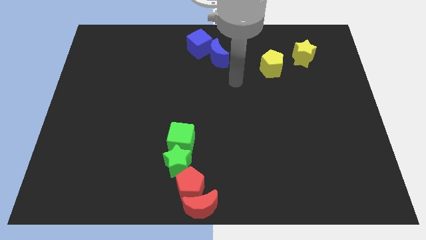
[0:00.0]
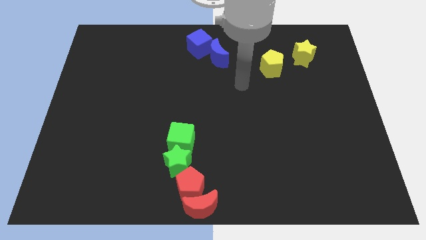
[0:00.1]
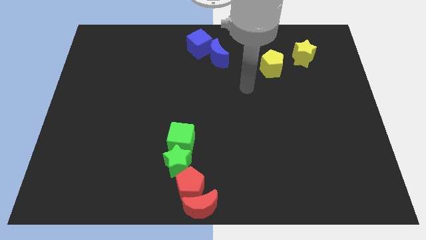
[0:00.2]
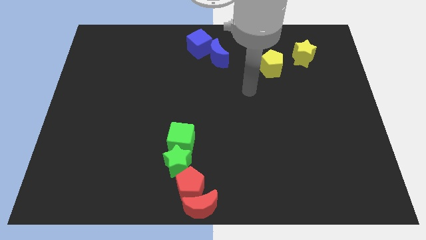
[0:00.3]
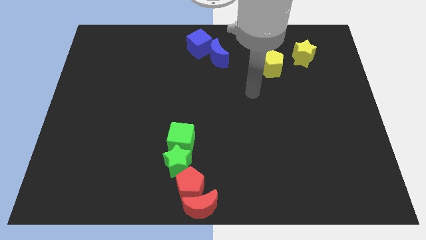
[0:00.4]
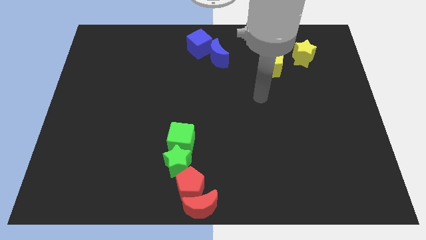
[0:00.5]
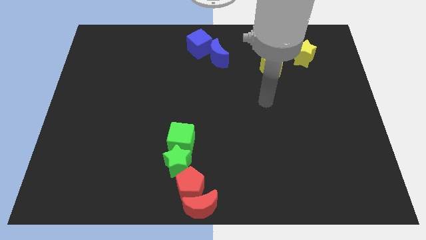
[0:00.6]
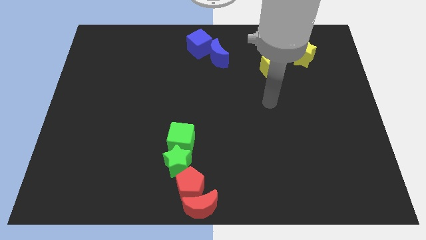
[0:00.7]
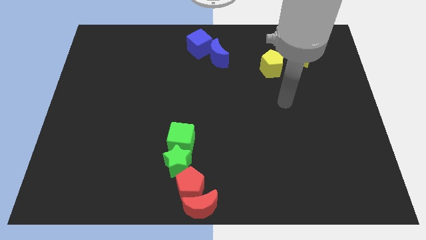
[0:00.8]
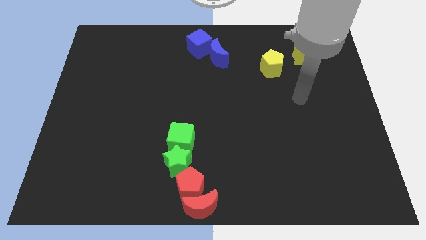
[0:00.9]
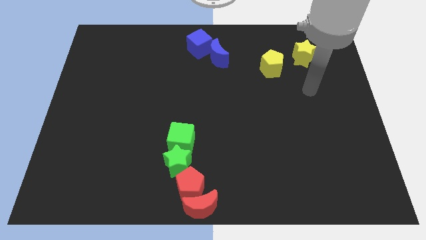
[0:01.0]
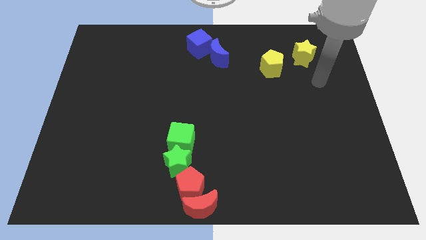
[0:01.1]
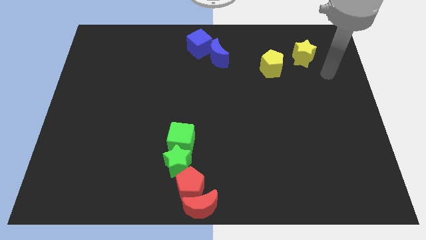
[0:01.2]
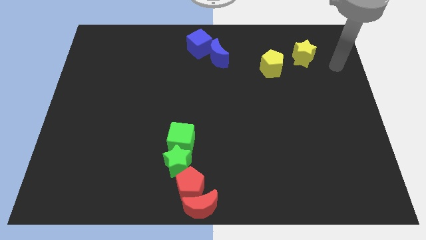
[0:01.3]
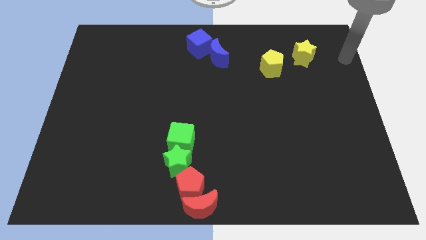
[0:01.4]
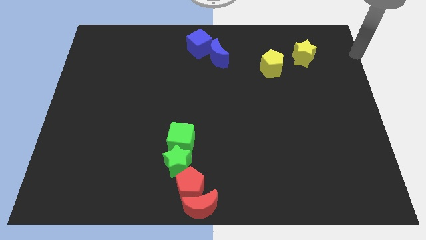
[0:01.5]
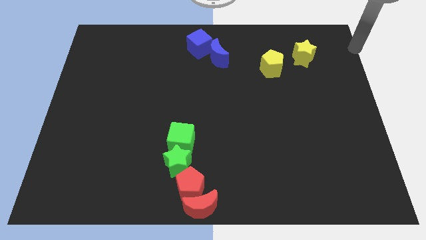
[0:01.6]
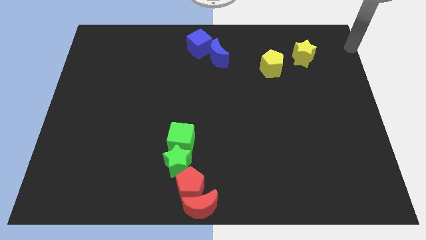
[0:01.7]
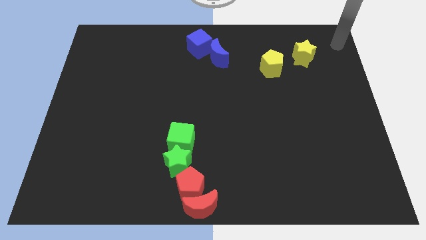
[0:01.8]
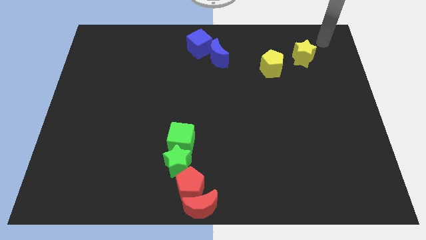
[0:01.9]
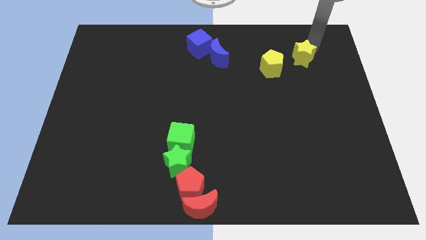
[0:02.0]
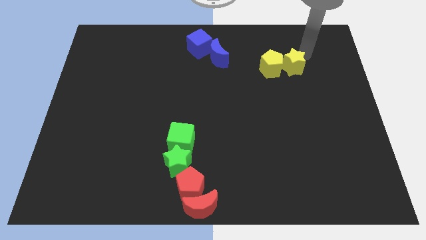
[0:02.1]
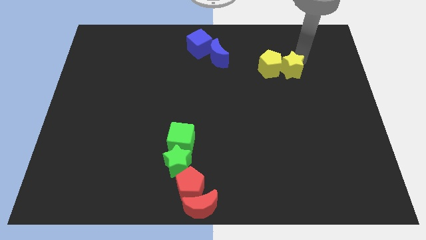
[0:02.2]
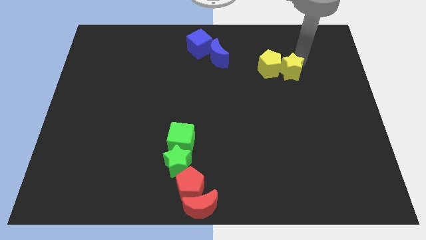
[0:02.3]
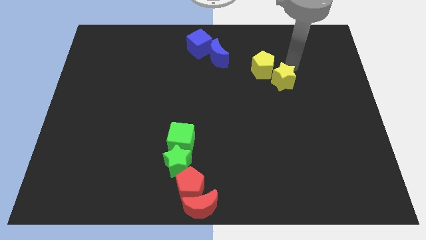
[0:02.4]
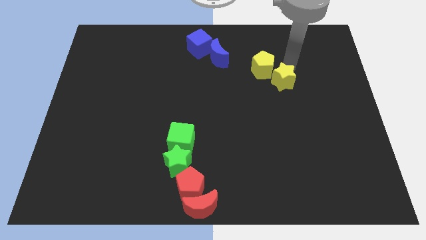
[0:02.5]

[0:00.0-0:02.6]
move the yellow star into the yellow pentagon

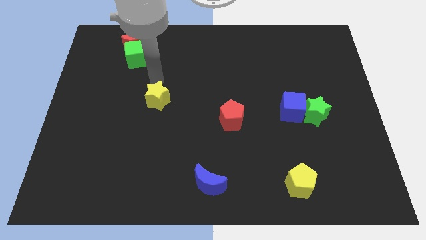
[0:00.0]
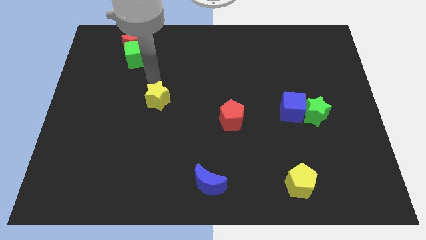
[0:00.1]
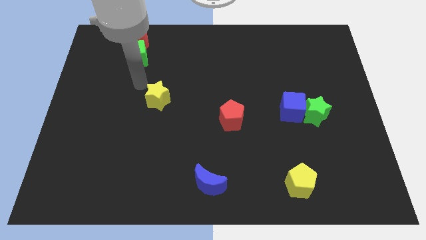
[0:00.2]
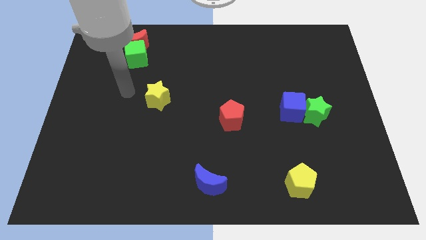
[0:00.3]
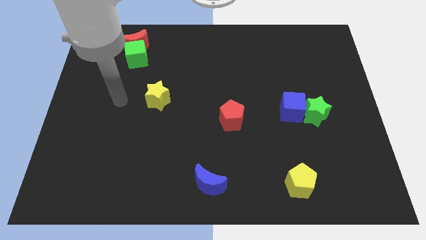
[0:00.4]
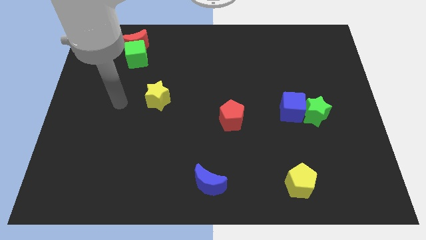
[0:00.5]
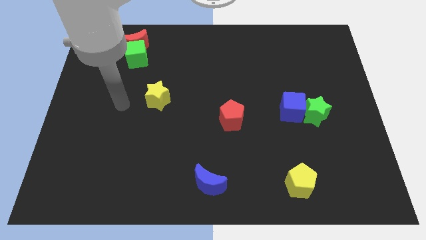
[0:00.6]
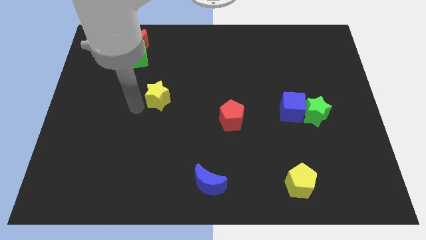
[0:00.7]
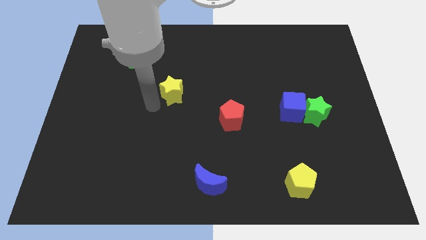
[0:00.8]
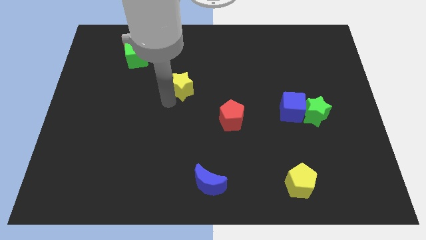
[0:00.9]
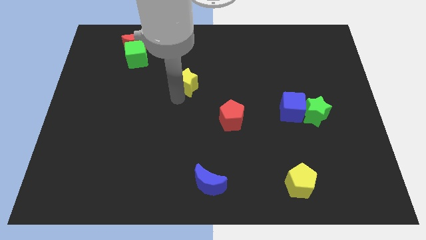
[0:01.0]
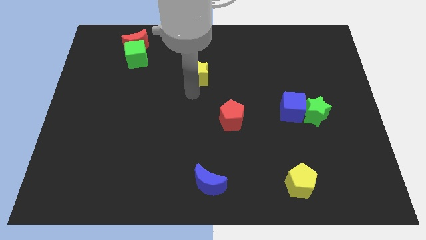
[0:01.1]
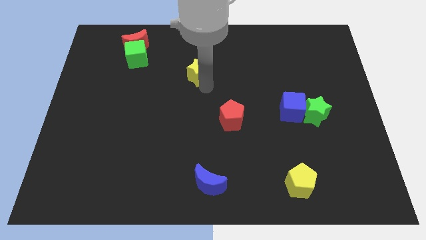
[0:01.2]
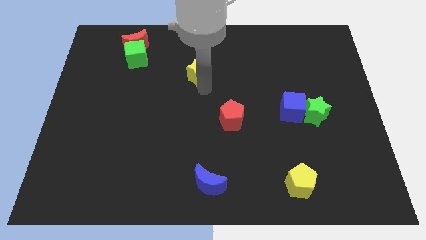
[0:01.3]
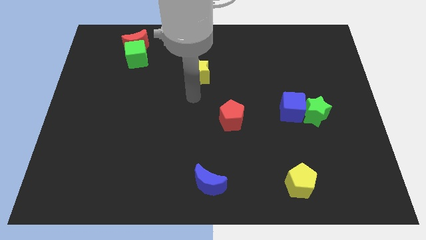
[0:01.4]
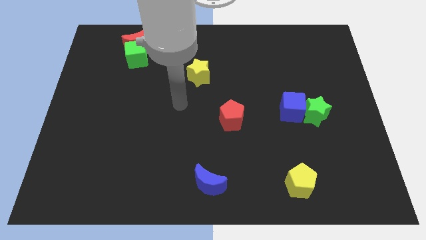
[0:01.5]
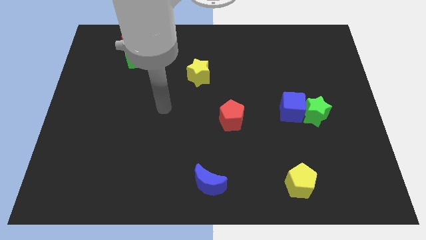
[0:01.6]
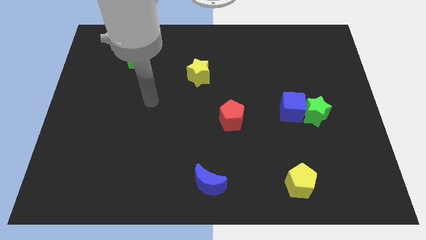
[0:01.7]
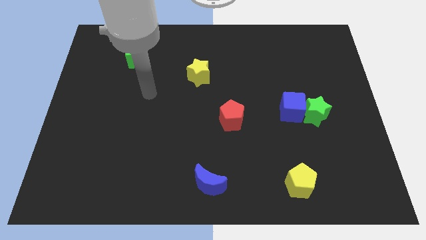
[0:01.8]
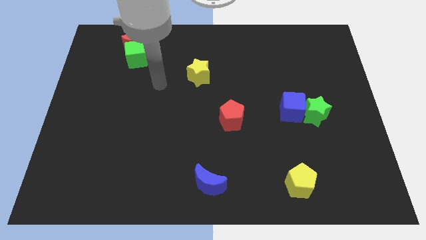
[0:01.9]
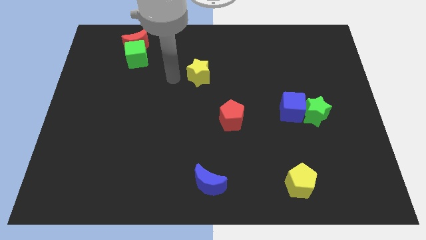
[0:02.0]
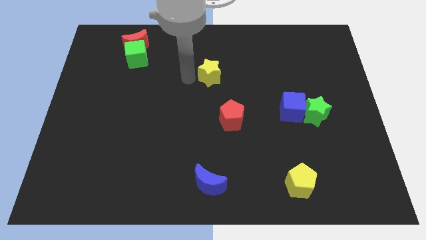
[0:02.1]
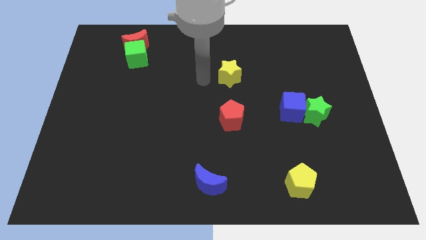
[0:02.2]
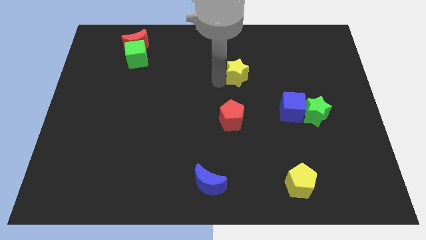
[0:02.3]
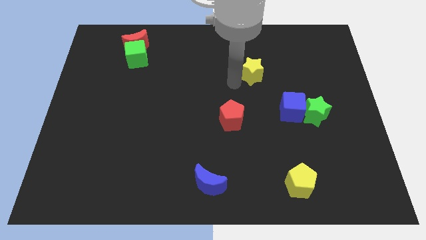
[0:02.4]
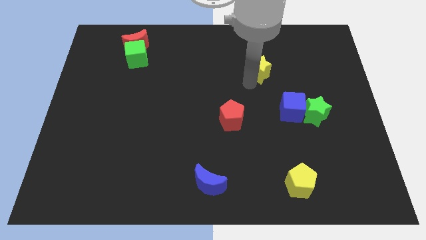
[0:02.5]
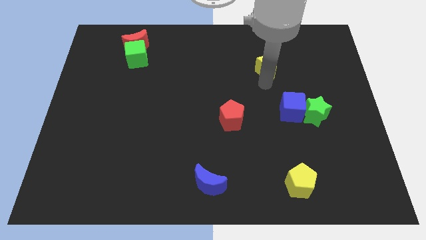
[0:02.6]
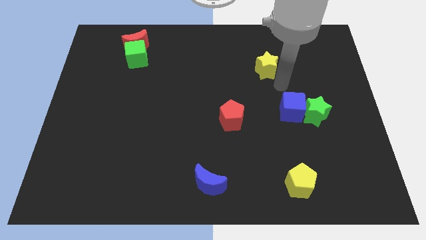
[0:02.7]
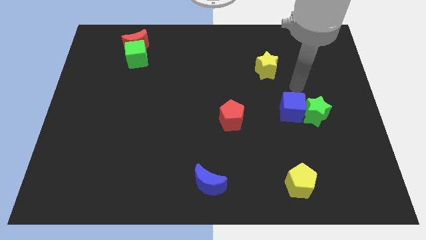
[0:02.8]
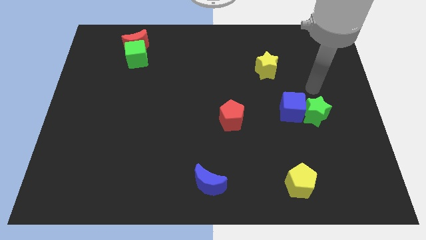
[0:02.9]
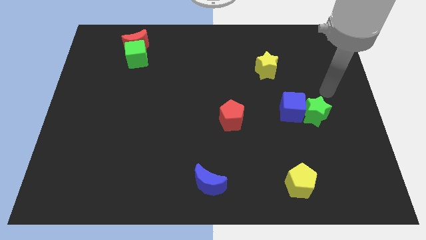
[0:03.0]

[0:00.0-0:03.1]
move the yellow star at the top right of the red pentagon

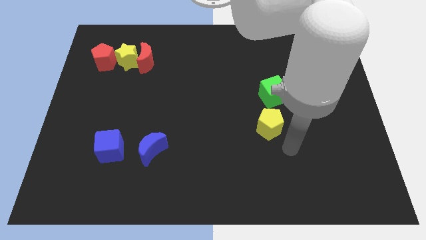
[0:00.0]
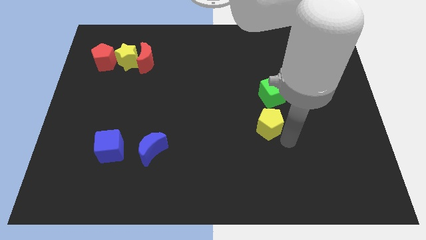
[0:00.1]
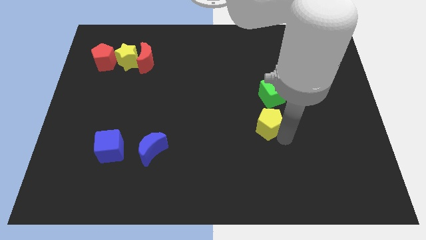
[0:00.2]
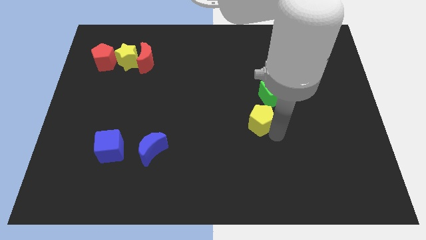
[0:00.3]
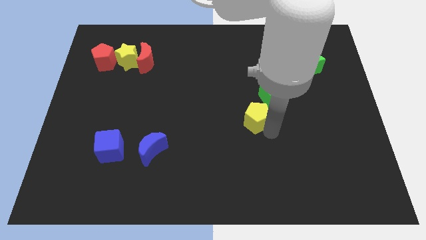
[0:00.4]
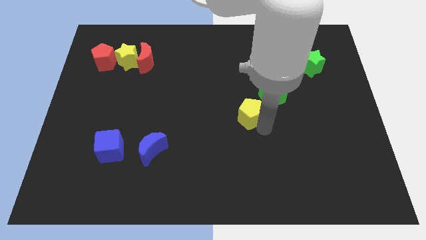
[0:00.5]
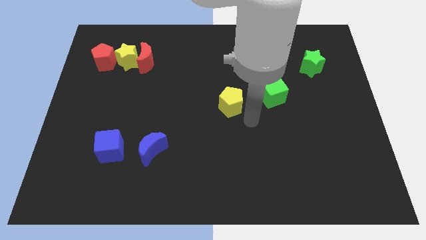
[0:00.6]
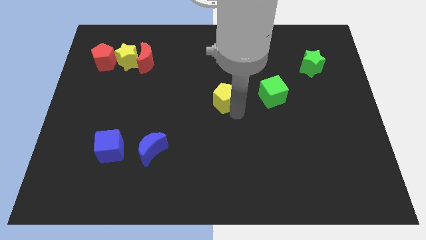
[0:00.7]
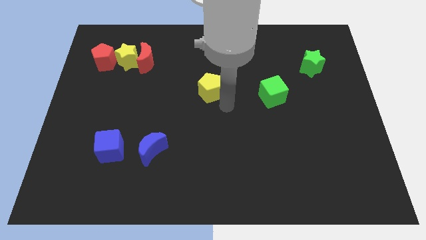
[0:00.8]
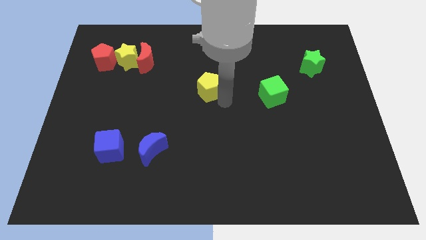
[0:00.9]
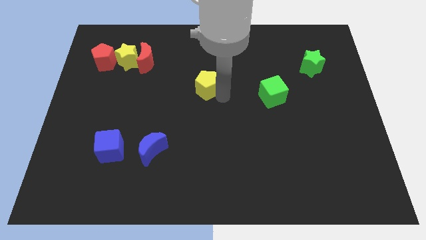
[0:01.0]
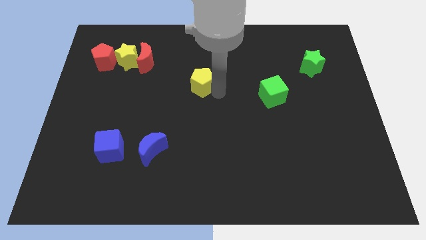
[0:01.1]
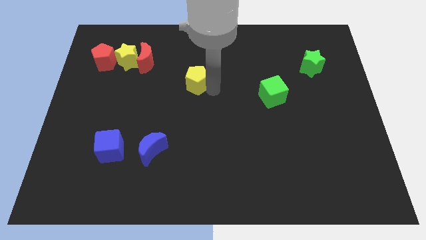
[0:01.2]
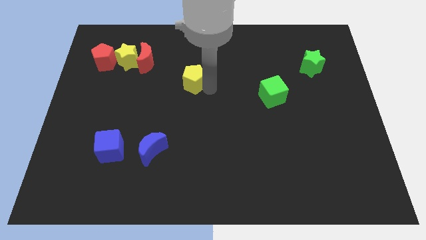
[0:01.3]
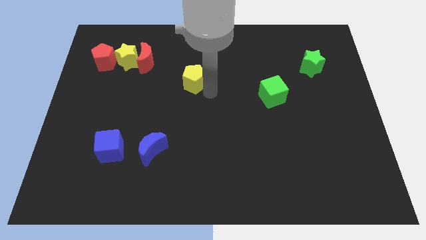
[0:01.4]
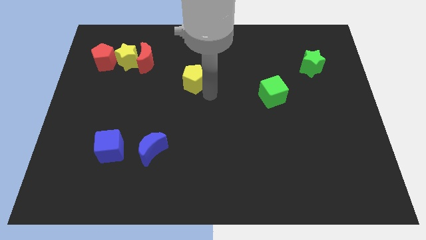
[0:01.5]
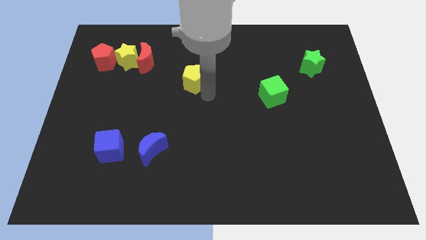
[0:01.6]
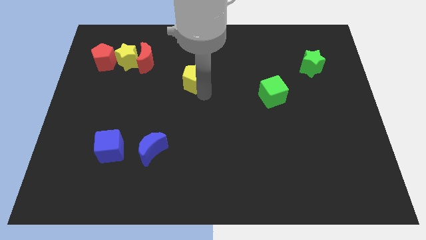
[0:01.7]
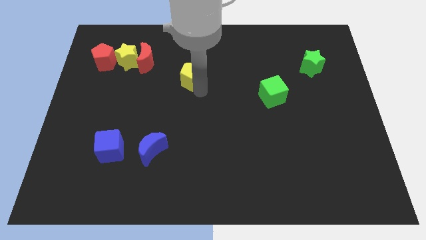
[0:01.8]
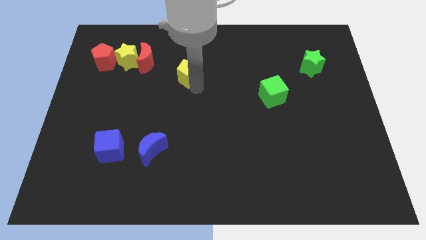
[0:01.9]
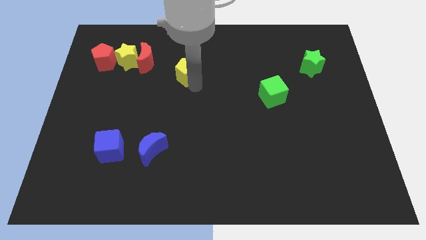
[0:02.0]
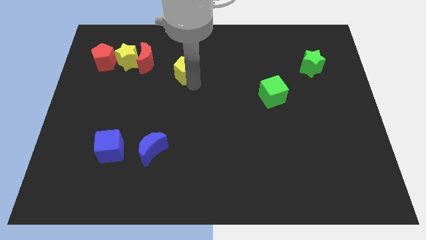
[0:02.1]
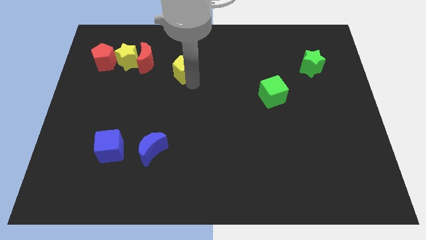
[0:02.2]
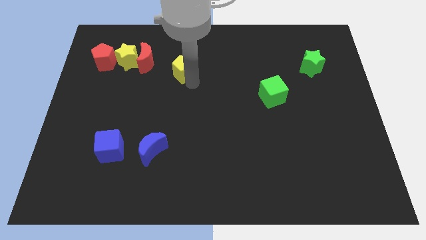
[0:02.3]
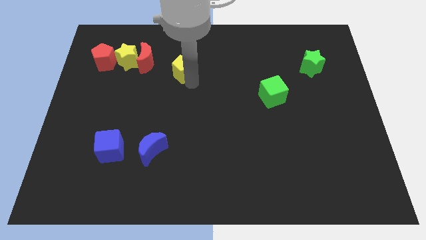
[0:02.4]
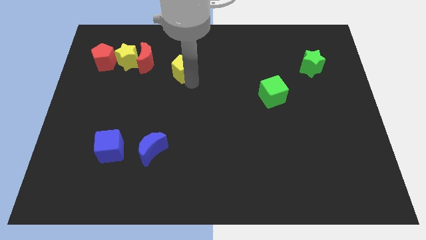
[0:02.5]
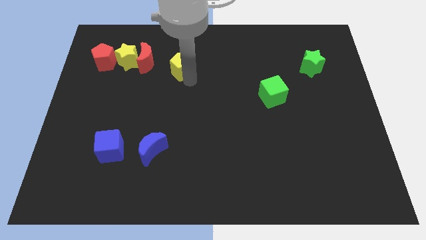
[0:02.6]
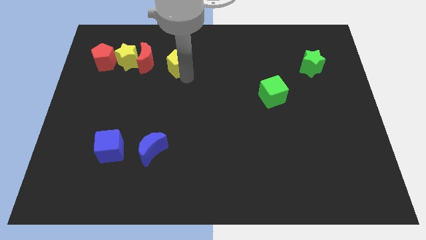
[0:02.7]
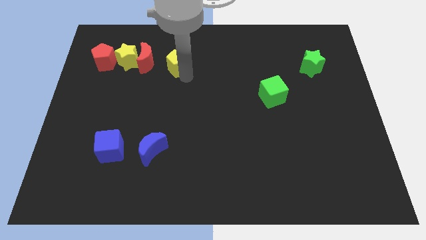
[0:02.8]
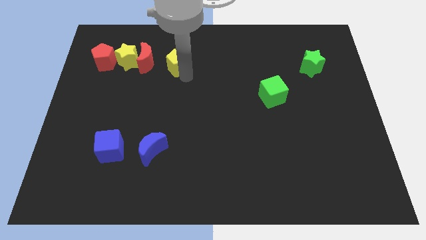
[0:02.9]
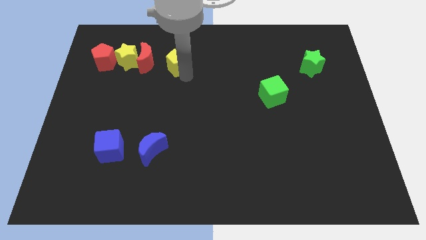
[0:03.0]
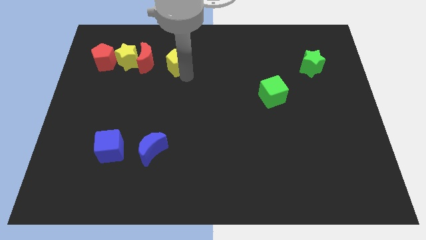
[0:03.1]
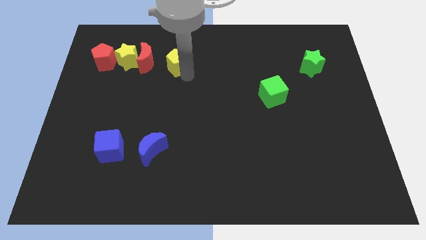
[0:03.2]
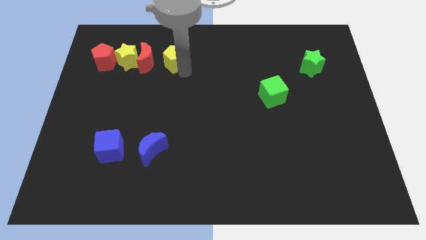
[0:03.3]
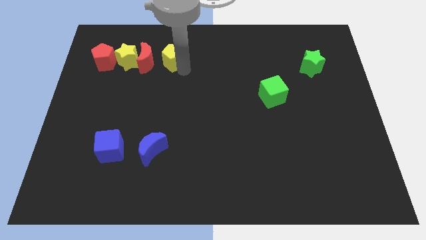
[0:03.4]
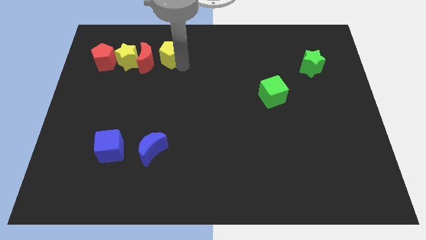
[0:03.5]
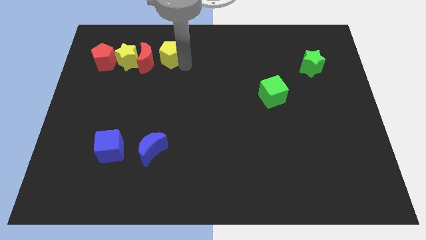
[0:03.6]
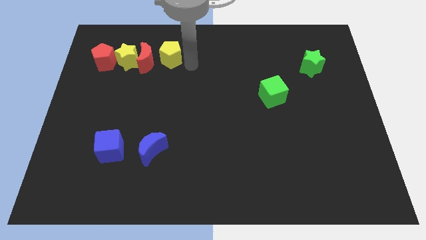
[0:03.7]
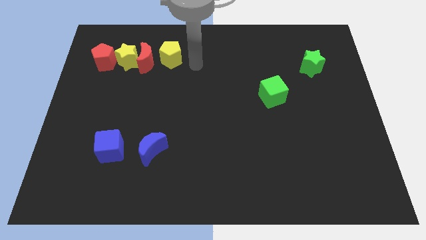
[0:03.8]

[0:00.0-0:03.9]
push the yellow pentagon to the right of red crescent
